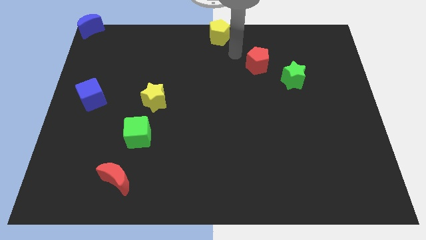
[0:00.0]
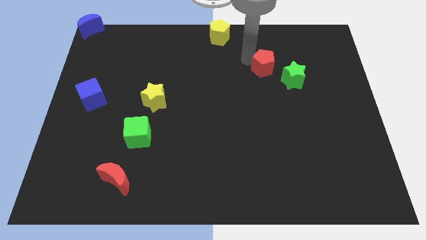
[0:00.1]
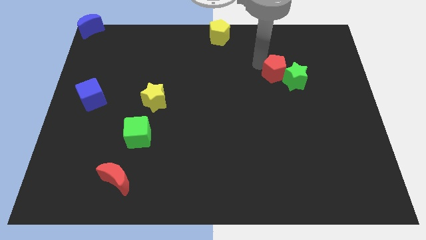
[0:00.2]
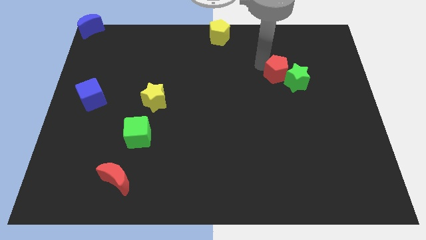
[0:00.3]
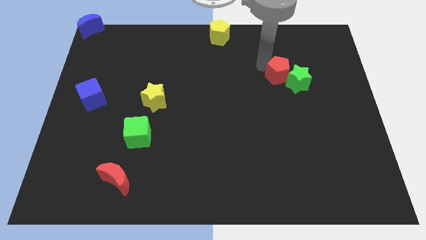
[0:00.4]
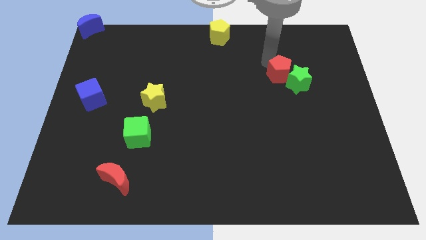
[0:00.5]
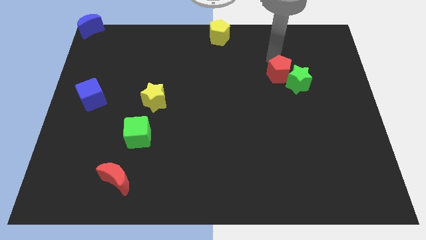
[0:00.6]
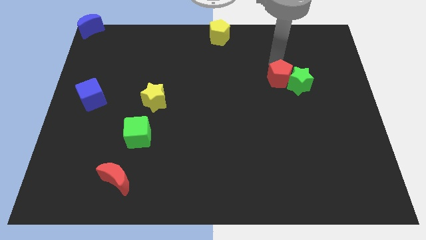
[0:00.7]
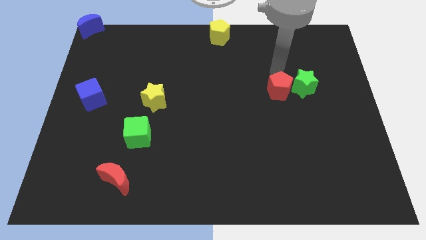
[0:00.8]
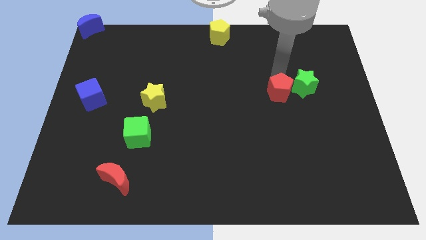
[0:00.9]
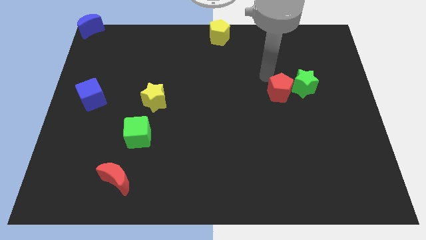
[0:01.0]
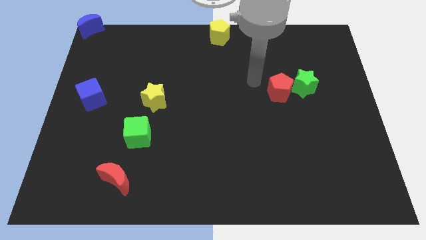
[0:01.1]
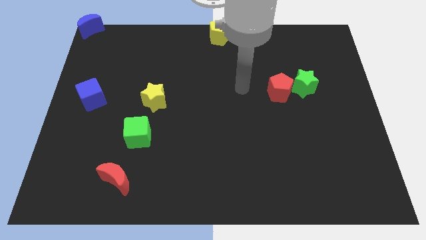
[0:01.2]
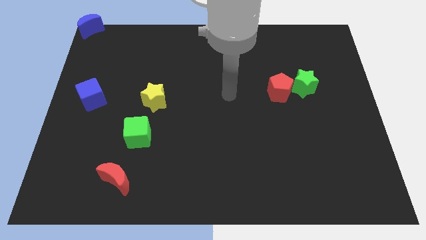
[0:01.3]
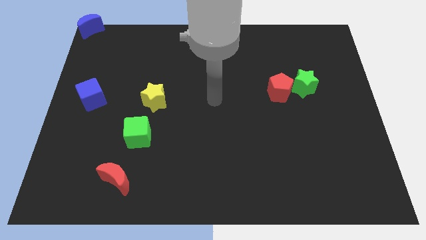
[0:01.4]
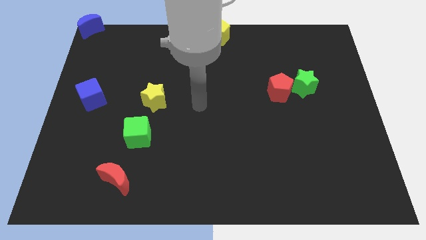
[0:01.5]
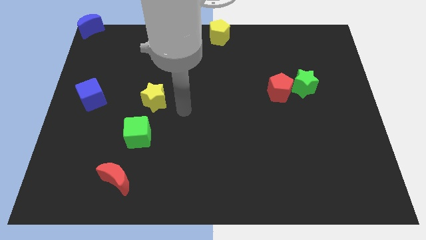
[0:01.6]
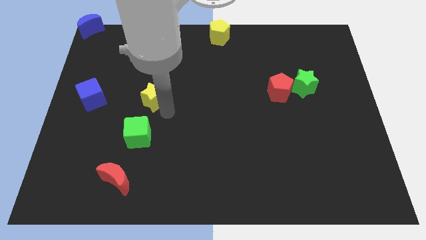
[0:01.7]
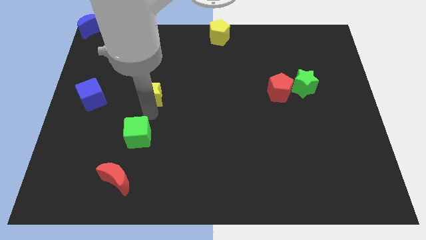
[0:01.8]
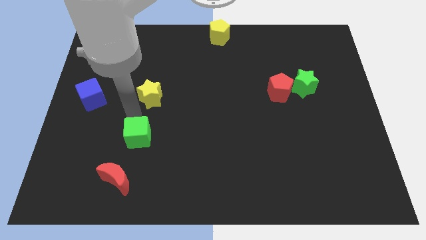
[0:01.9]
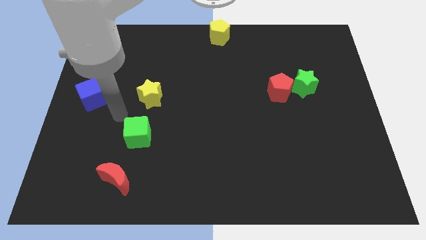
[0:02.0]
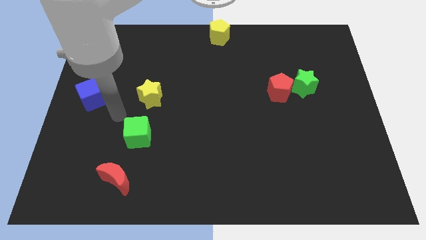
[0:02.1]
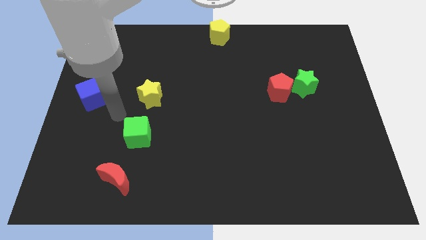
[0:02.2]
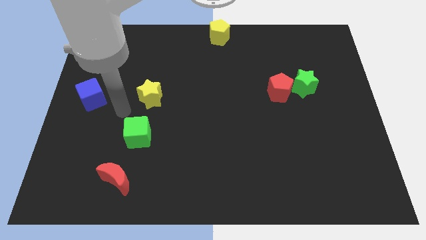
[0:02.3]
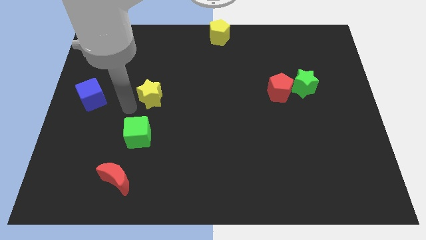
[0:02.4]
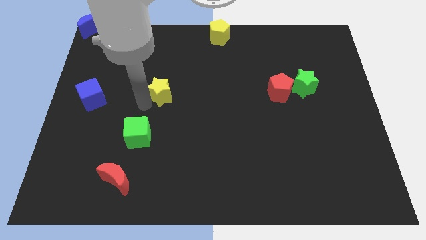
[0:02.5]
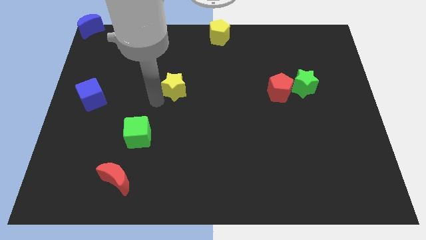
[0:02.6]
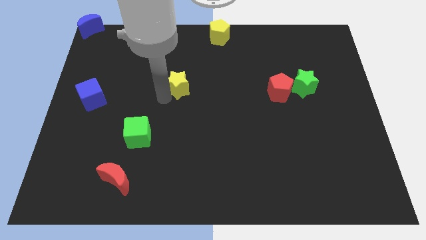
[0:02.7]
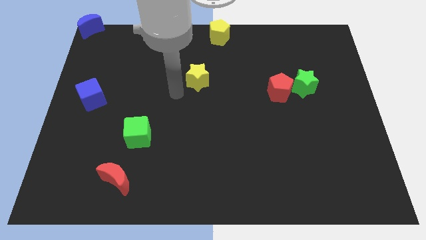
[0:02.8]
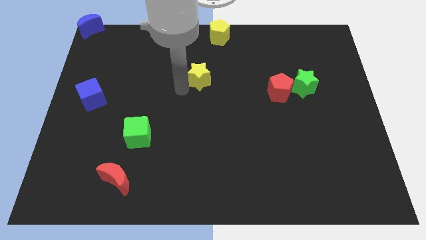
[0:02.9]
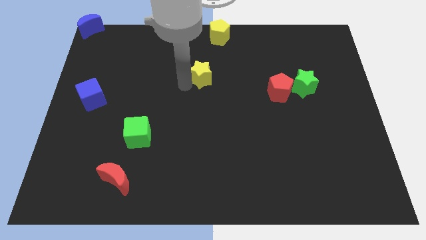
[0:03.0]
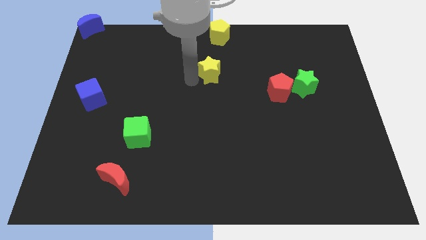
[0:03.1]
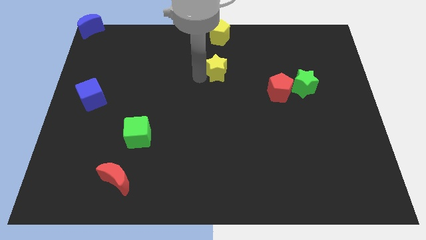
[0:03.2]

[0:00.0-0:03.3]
push yellow star below yellow pentagon

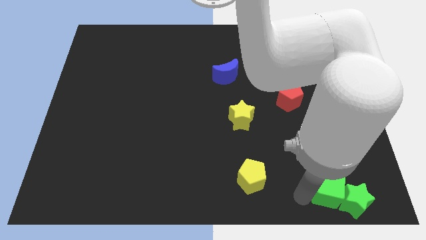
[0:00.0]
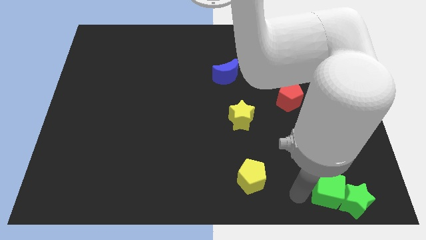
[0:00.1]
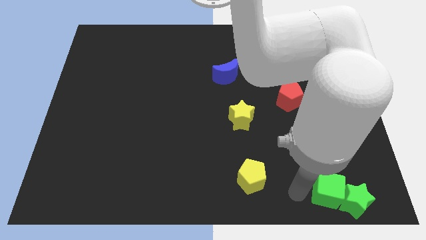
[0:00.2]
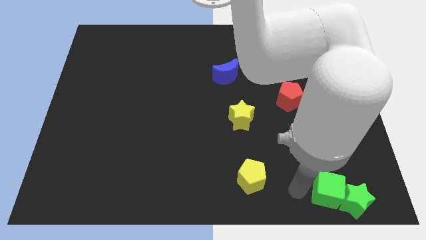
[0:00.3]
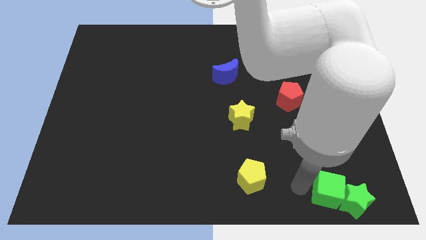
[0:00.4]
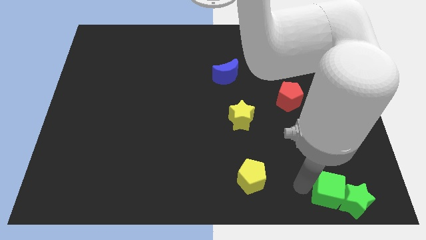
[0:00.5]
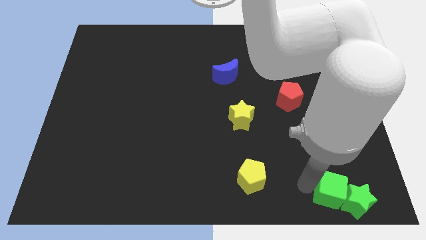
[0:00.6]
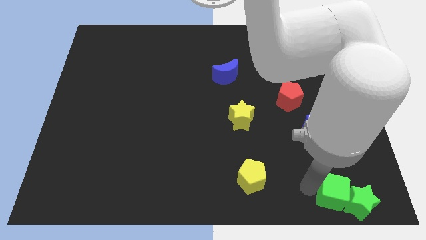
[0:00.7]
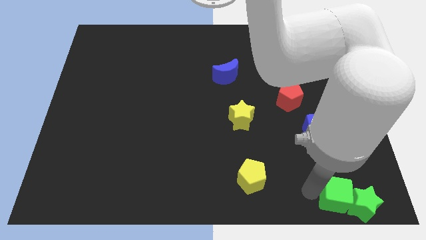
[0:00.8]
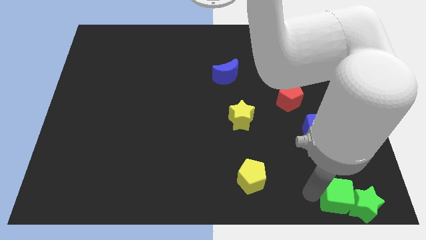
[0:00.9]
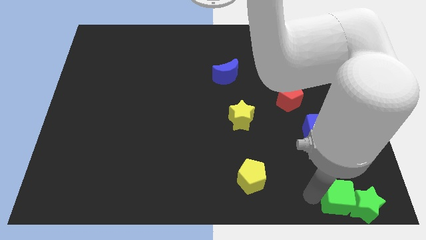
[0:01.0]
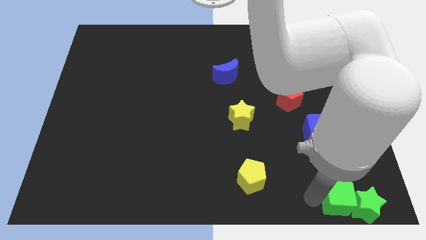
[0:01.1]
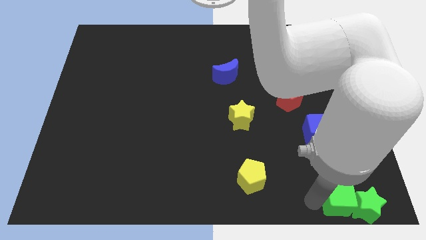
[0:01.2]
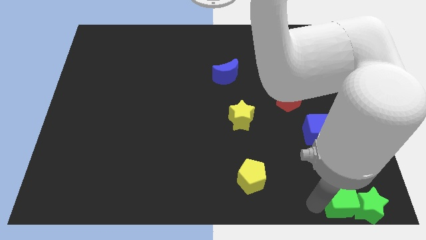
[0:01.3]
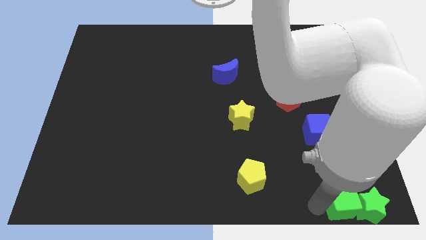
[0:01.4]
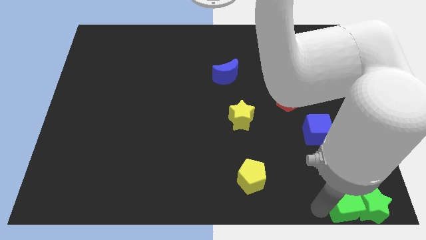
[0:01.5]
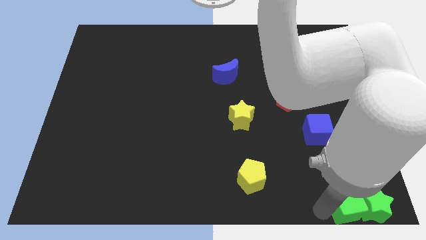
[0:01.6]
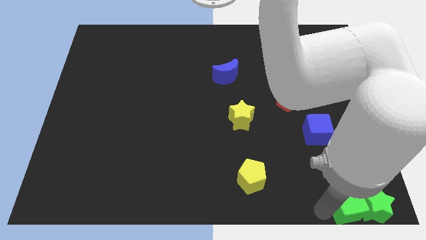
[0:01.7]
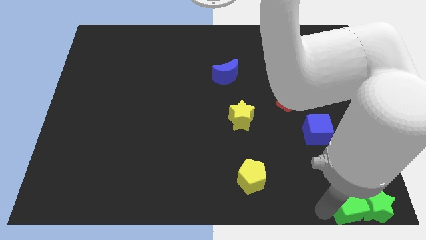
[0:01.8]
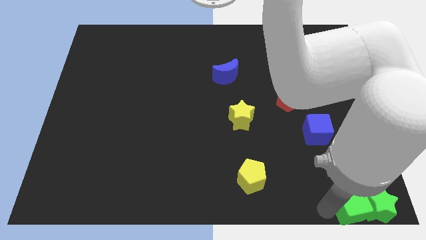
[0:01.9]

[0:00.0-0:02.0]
push green star and green cube to the bottom right corner of the board

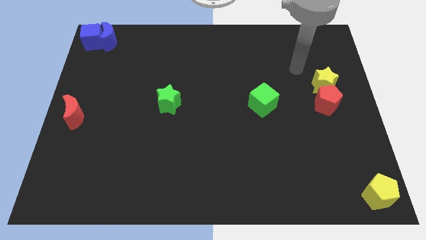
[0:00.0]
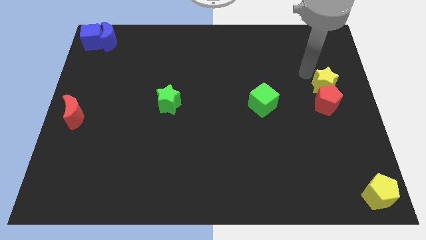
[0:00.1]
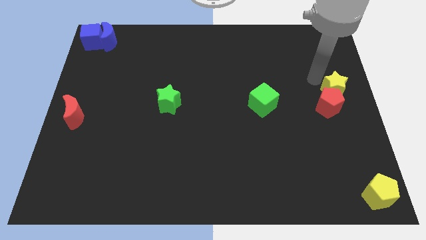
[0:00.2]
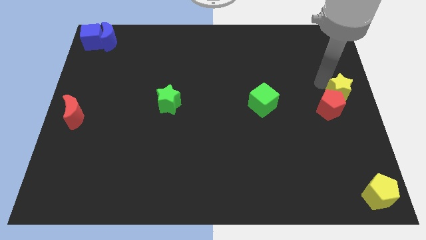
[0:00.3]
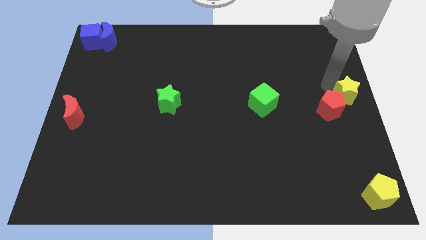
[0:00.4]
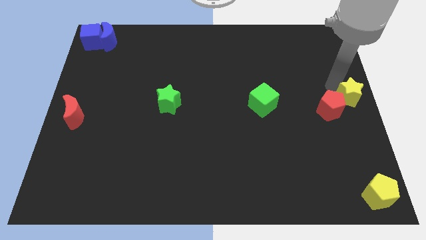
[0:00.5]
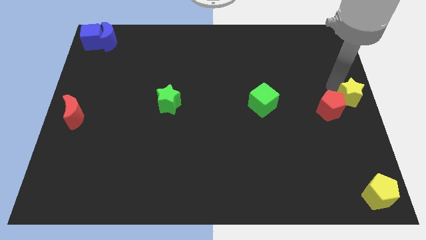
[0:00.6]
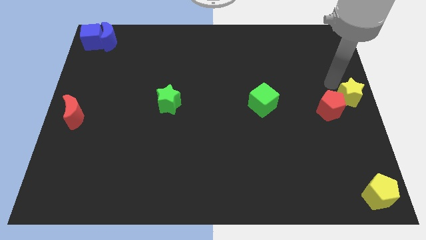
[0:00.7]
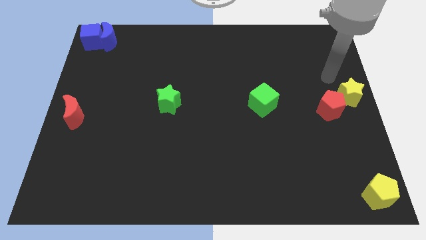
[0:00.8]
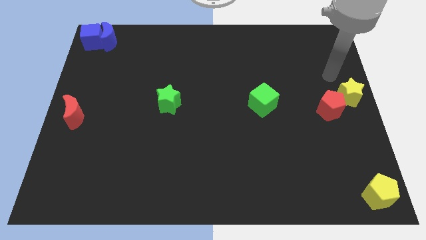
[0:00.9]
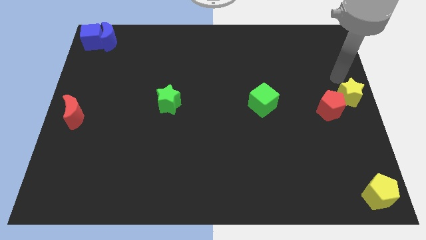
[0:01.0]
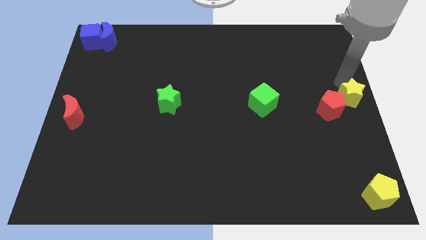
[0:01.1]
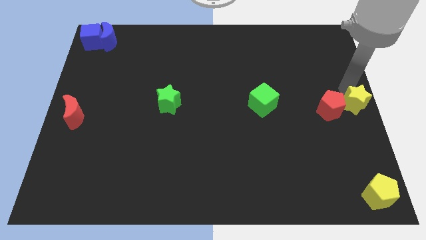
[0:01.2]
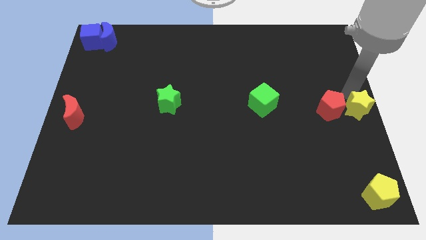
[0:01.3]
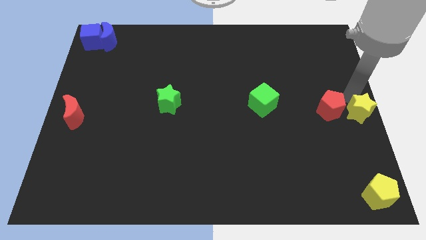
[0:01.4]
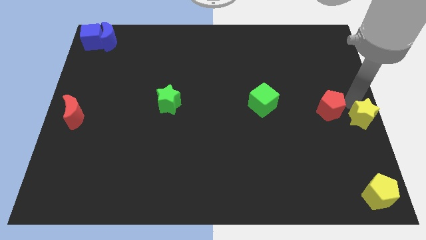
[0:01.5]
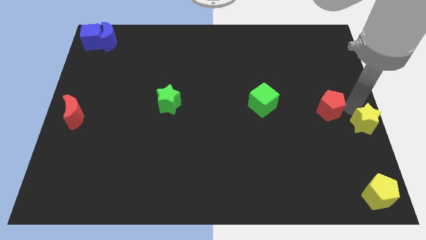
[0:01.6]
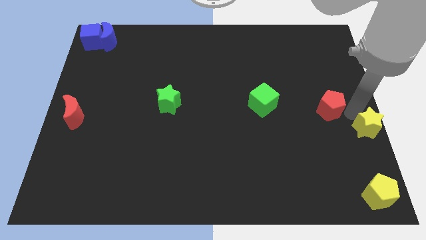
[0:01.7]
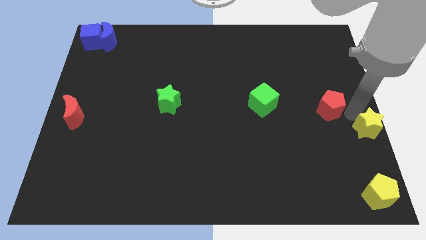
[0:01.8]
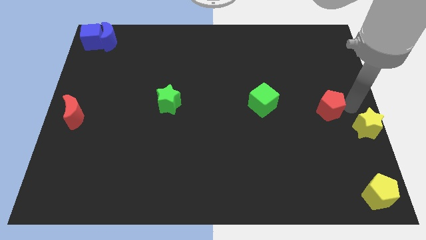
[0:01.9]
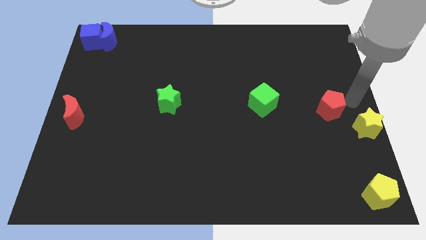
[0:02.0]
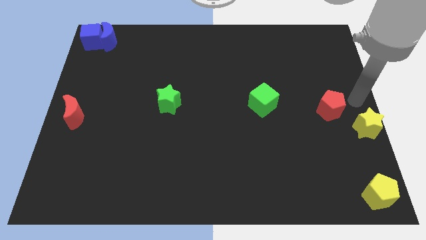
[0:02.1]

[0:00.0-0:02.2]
separate the yellow star from the red pentagon

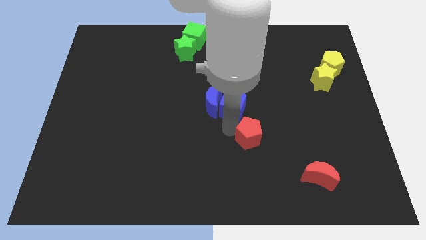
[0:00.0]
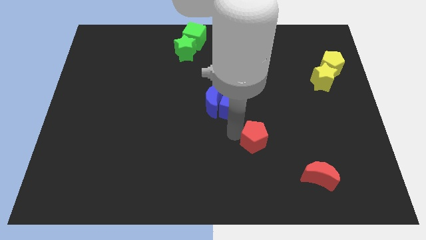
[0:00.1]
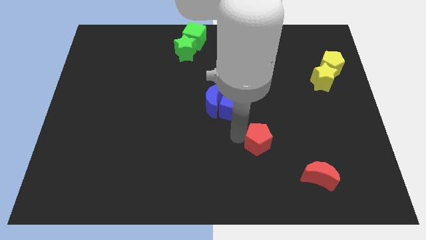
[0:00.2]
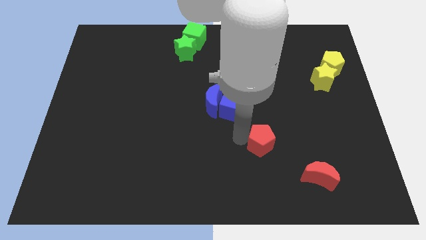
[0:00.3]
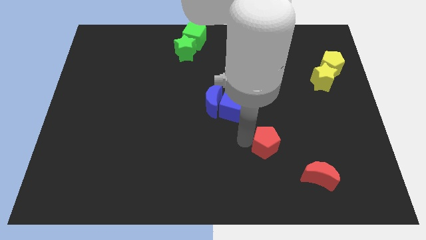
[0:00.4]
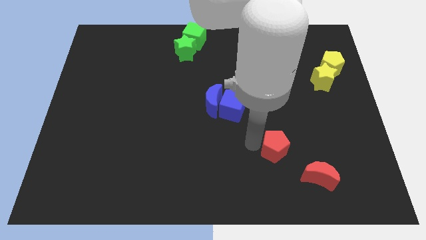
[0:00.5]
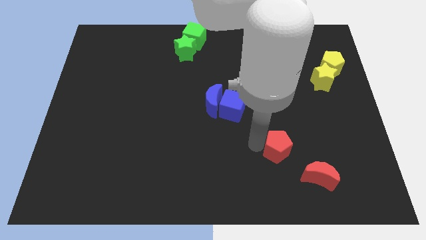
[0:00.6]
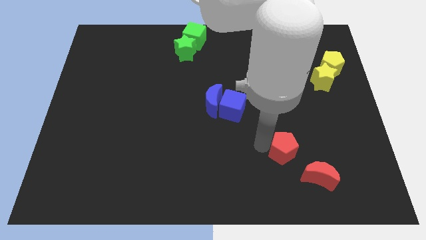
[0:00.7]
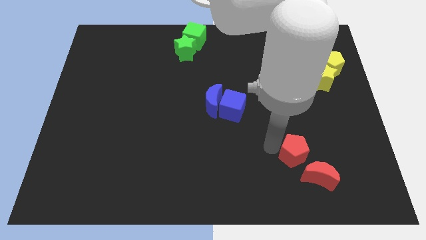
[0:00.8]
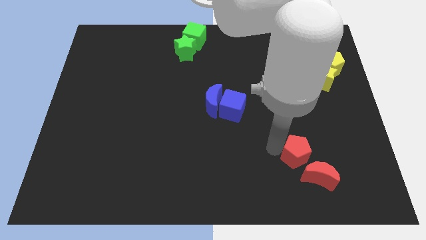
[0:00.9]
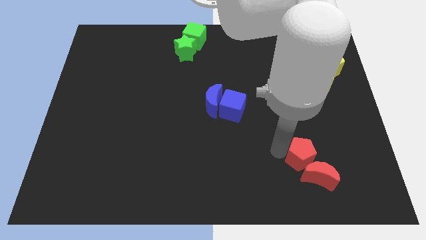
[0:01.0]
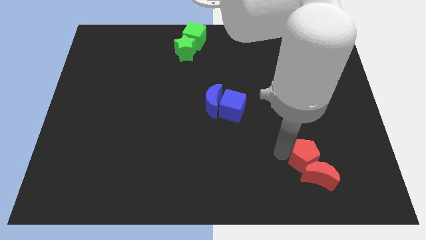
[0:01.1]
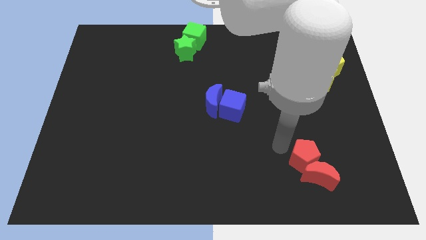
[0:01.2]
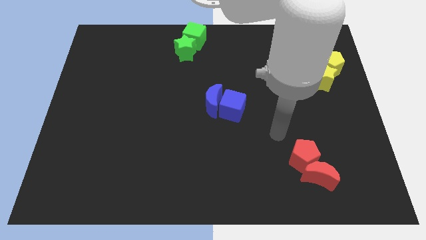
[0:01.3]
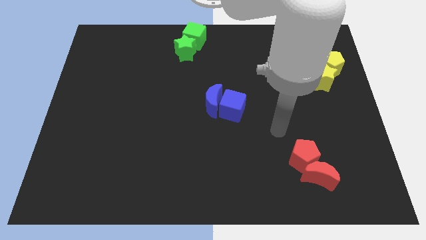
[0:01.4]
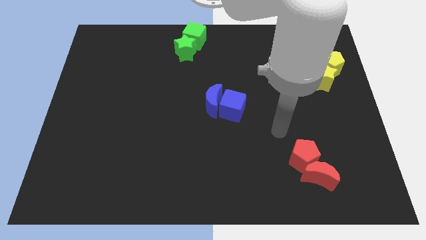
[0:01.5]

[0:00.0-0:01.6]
move the red pentagon into the red moon
